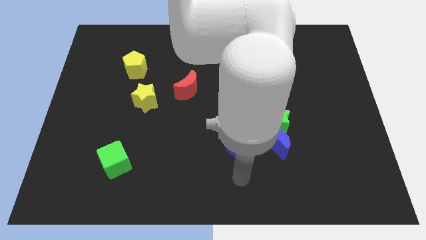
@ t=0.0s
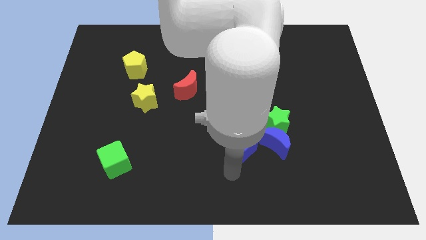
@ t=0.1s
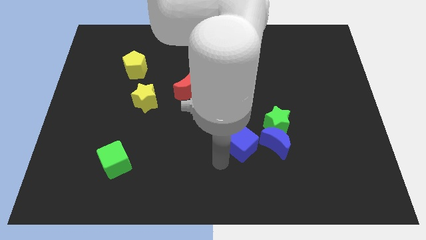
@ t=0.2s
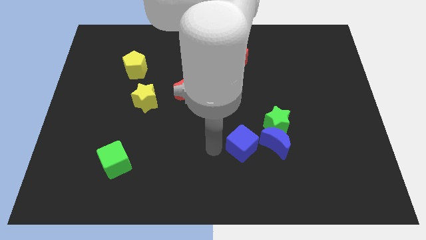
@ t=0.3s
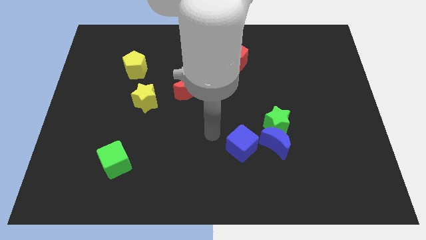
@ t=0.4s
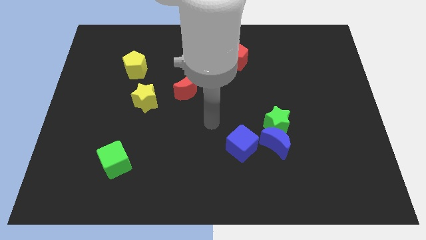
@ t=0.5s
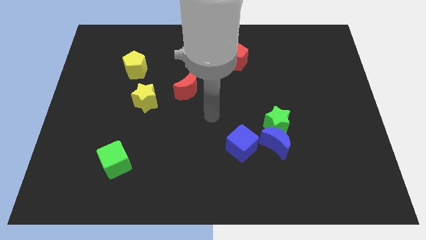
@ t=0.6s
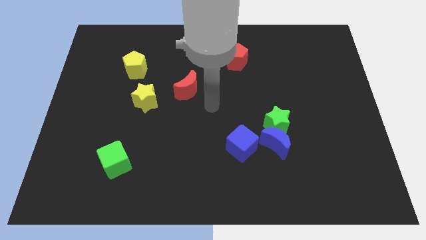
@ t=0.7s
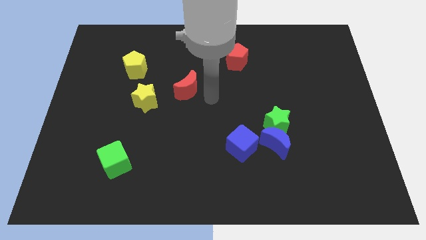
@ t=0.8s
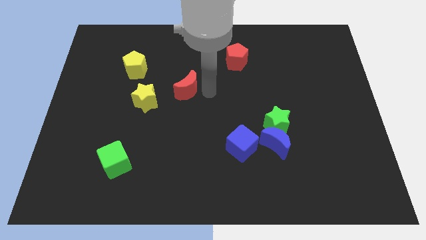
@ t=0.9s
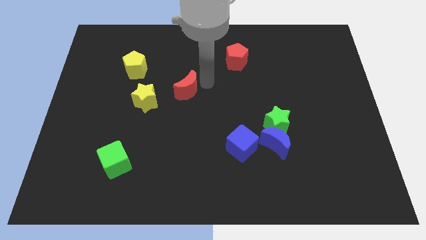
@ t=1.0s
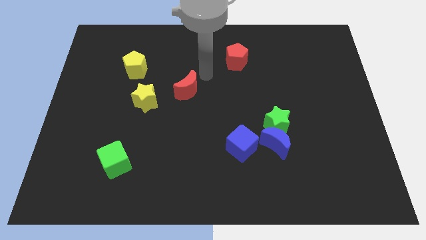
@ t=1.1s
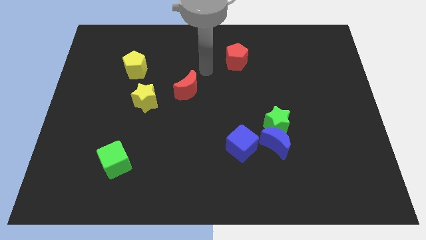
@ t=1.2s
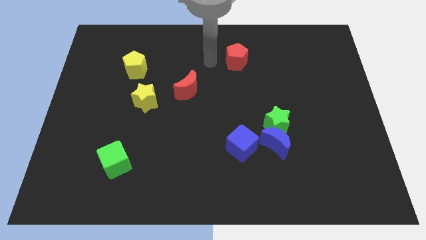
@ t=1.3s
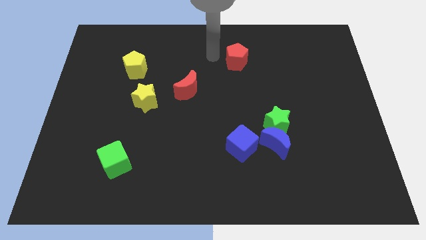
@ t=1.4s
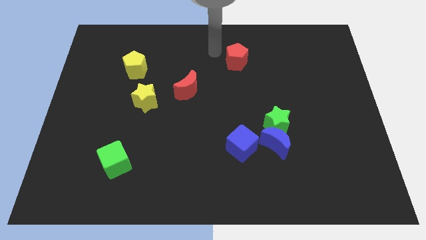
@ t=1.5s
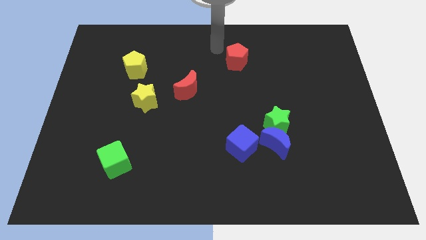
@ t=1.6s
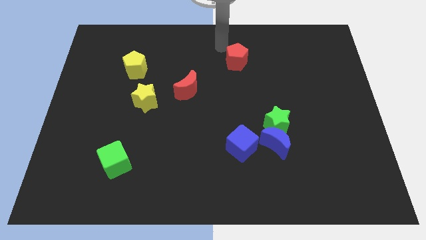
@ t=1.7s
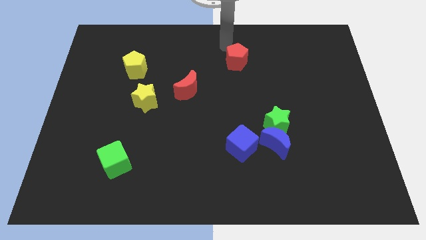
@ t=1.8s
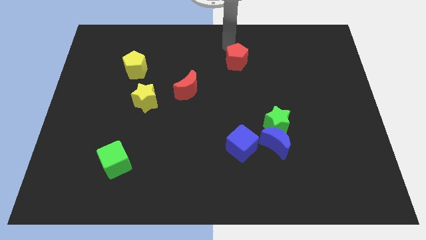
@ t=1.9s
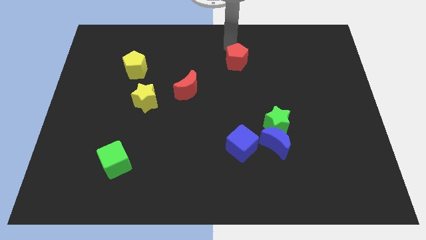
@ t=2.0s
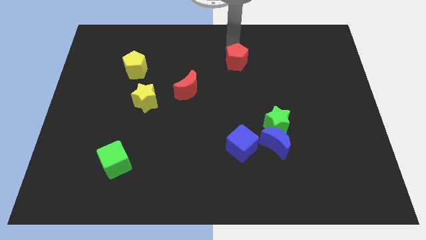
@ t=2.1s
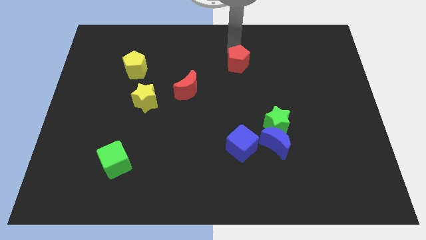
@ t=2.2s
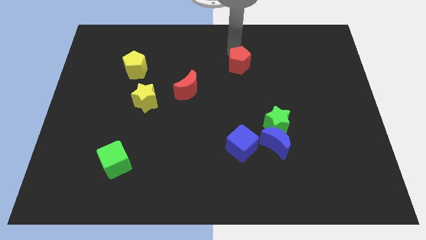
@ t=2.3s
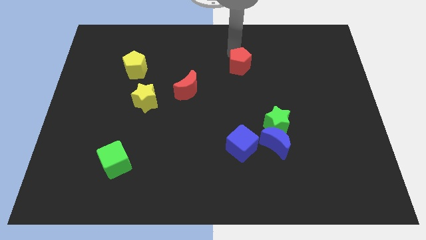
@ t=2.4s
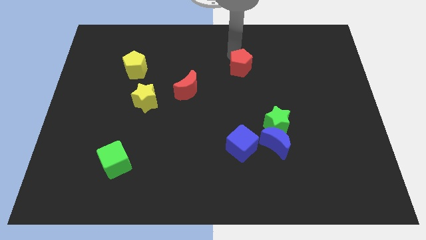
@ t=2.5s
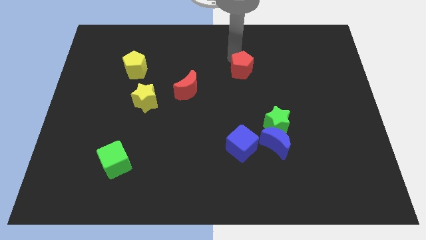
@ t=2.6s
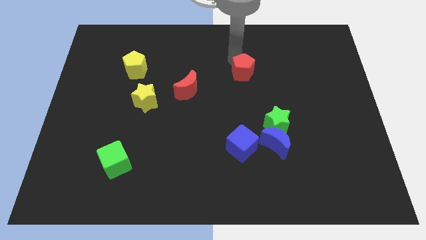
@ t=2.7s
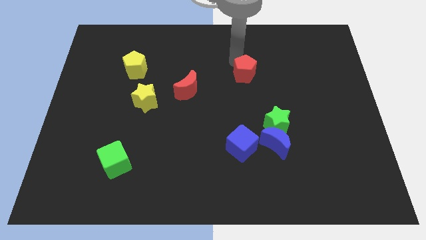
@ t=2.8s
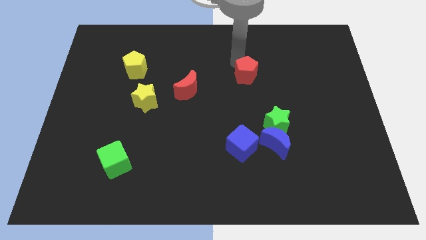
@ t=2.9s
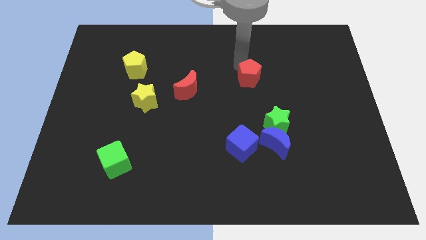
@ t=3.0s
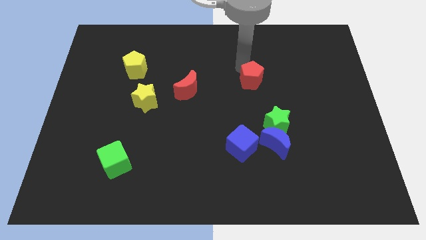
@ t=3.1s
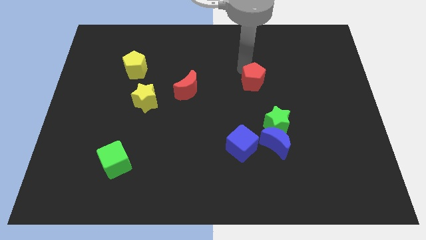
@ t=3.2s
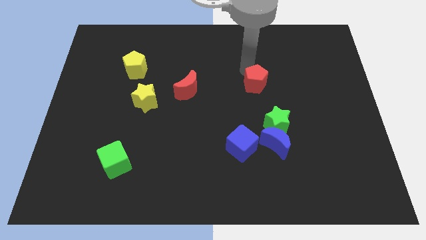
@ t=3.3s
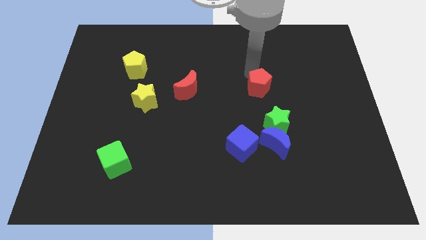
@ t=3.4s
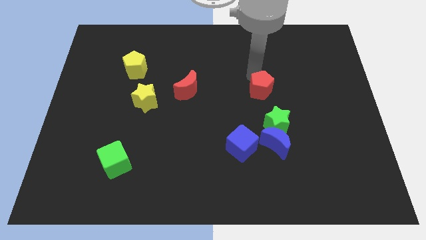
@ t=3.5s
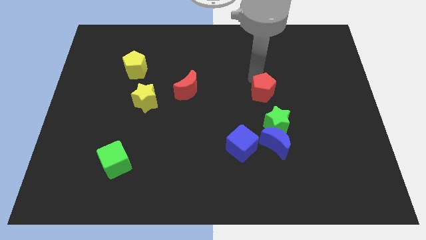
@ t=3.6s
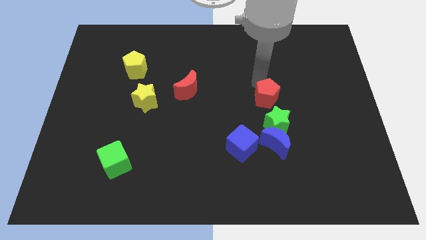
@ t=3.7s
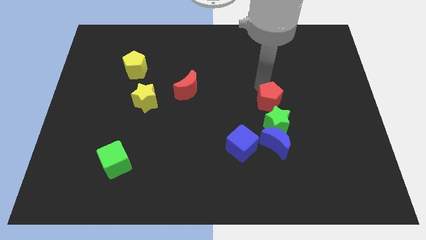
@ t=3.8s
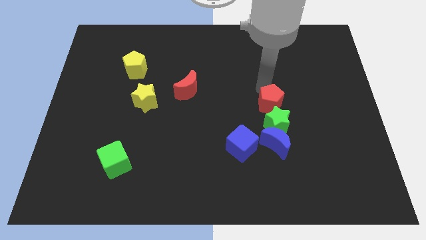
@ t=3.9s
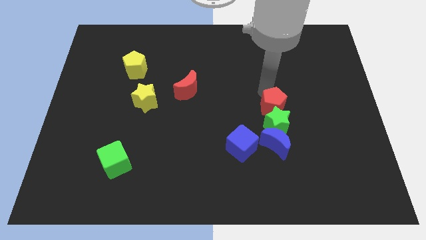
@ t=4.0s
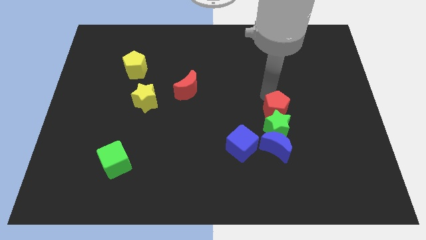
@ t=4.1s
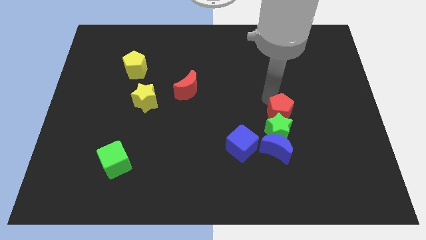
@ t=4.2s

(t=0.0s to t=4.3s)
move the red pentagon close to the green star

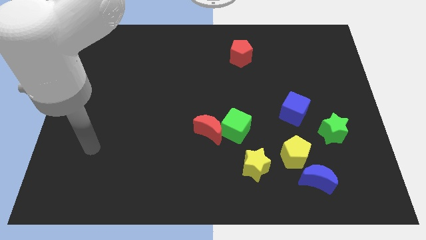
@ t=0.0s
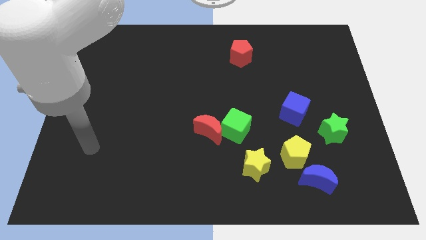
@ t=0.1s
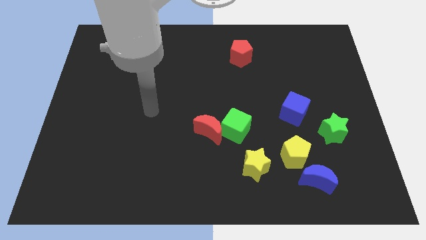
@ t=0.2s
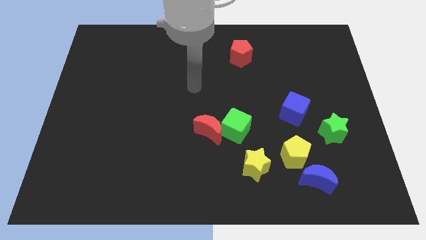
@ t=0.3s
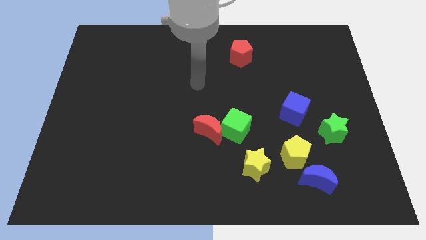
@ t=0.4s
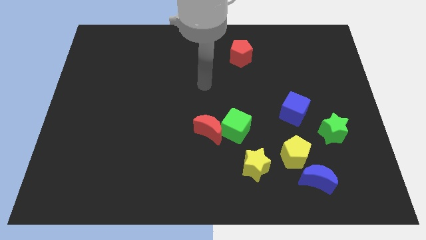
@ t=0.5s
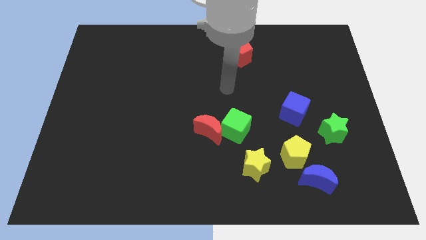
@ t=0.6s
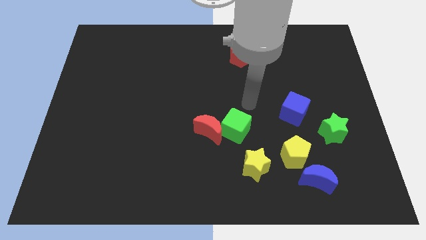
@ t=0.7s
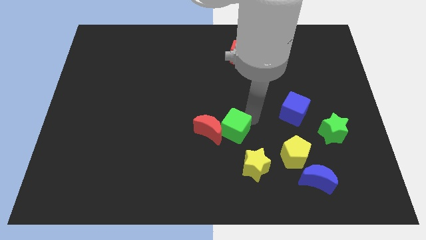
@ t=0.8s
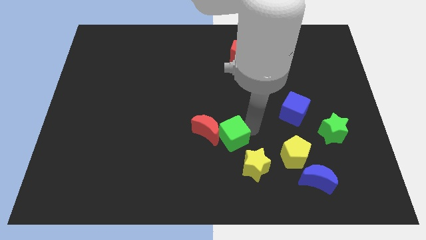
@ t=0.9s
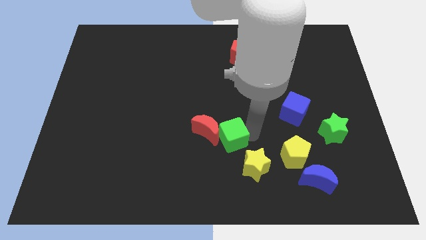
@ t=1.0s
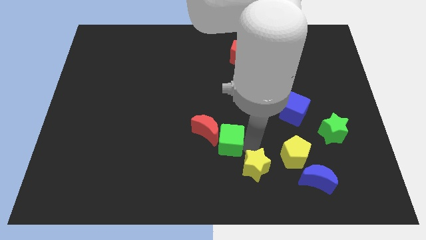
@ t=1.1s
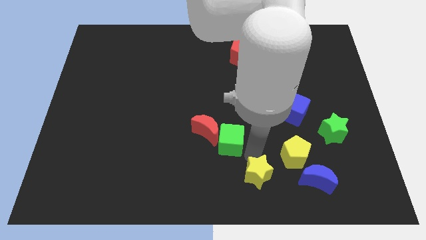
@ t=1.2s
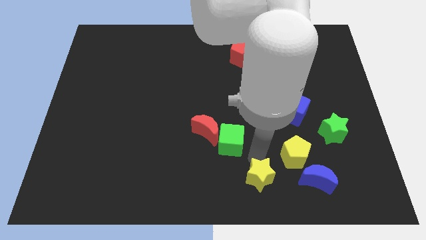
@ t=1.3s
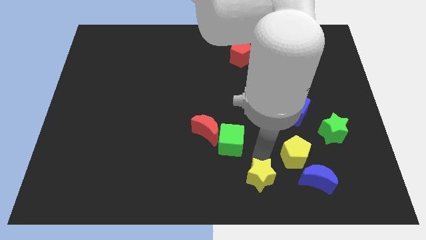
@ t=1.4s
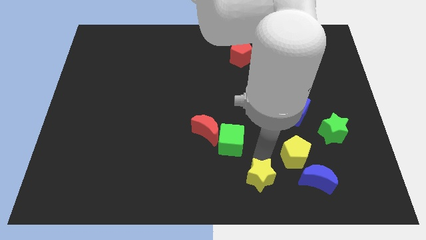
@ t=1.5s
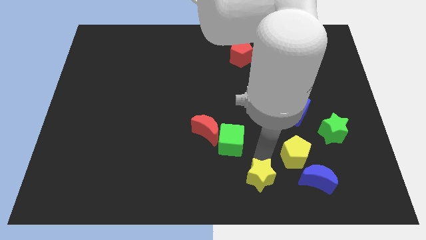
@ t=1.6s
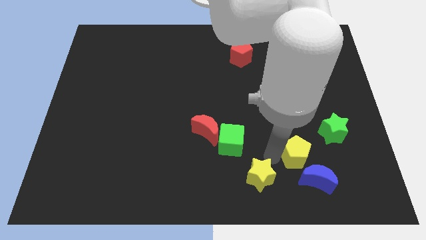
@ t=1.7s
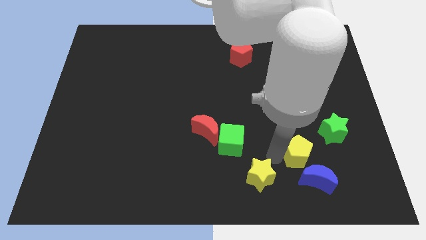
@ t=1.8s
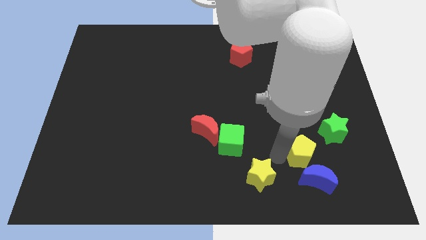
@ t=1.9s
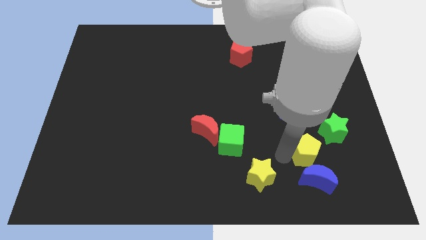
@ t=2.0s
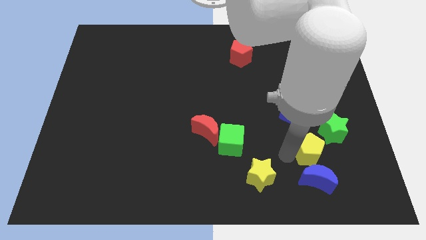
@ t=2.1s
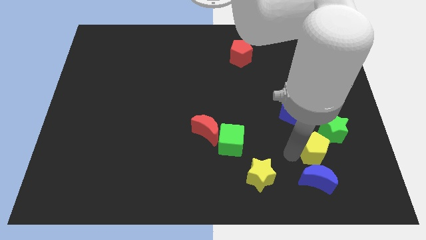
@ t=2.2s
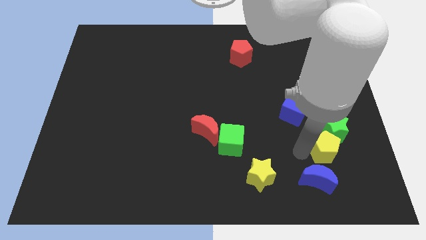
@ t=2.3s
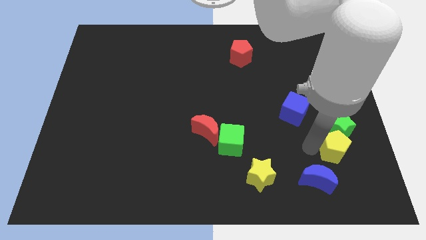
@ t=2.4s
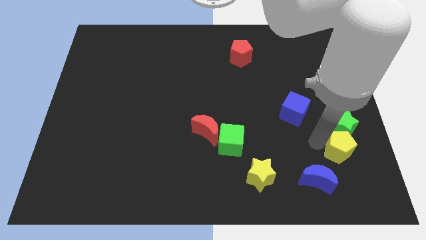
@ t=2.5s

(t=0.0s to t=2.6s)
put the yellow pentagon close to the green star

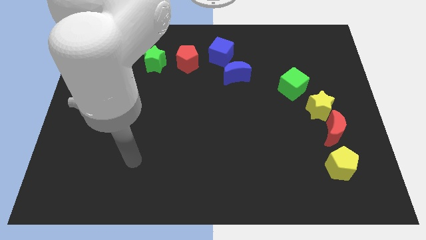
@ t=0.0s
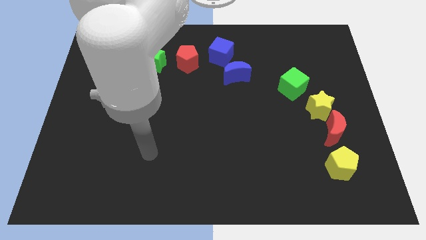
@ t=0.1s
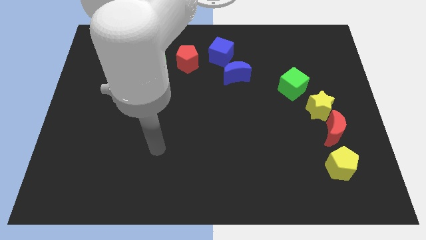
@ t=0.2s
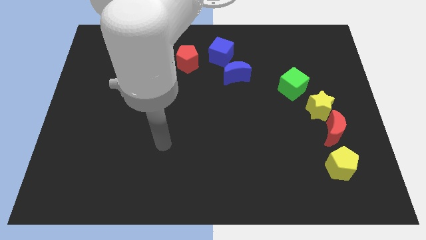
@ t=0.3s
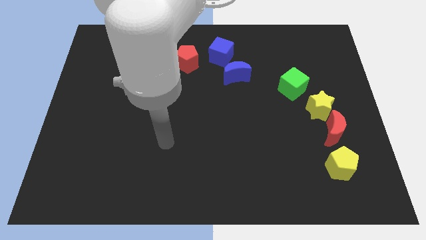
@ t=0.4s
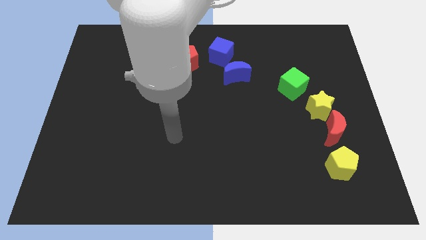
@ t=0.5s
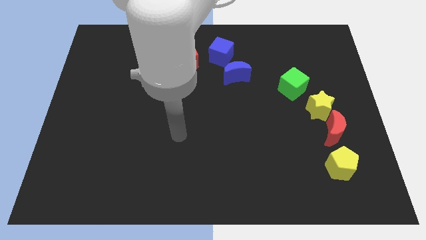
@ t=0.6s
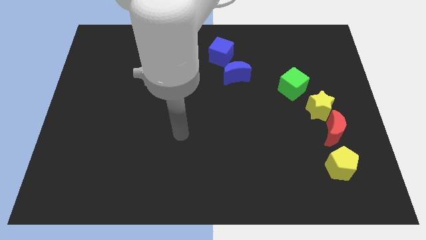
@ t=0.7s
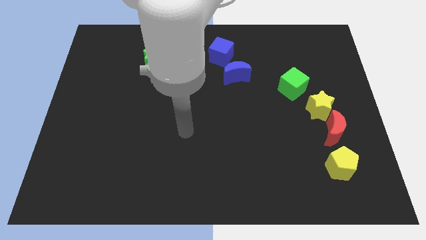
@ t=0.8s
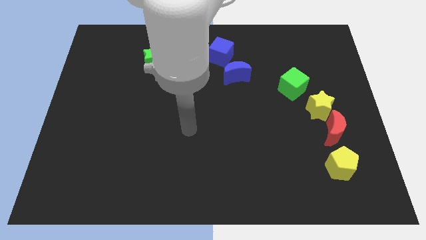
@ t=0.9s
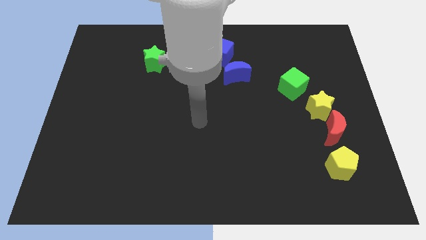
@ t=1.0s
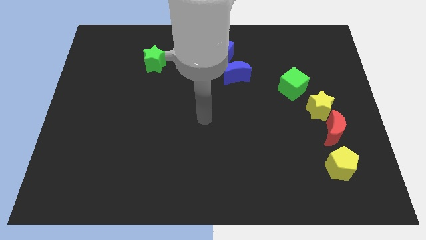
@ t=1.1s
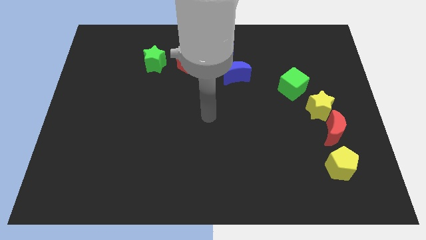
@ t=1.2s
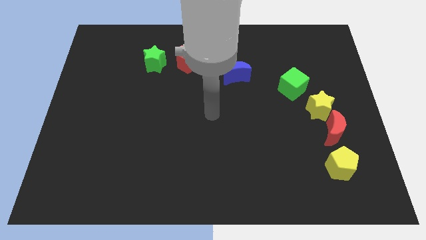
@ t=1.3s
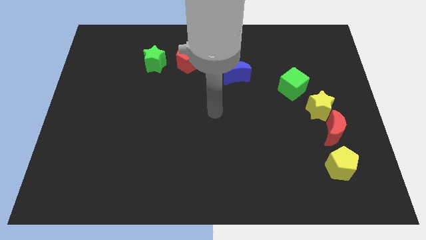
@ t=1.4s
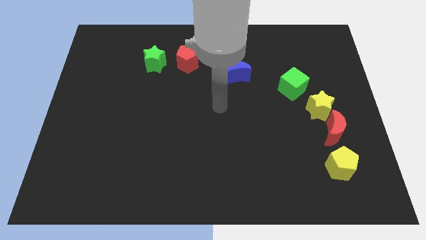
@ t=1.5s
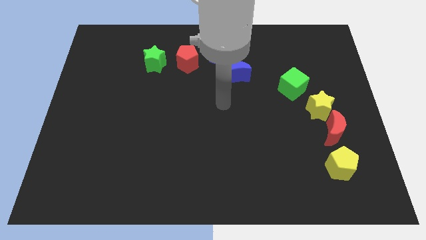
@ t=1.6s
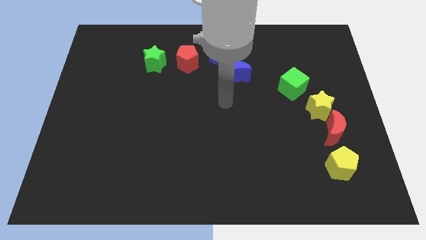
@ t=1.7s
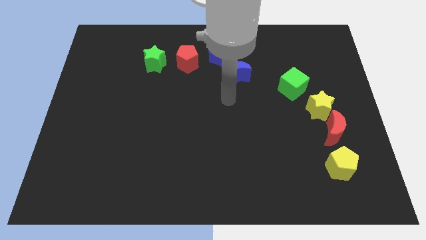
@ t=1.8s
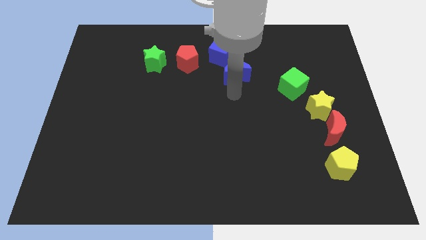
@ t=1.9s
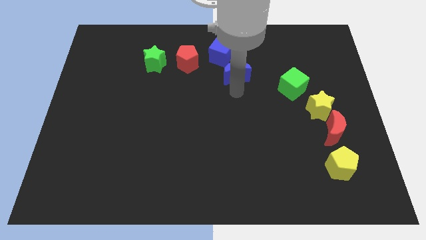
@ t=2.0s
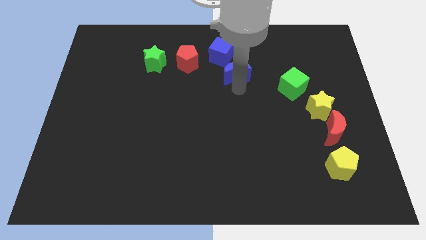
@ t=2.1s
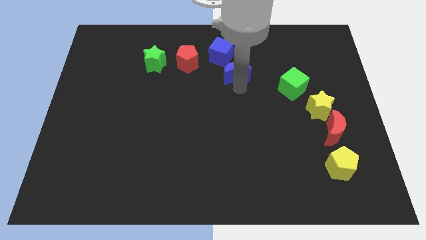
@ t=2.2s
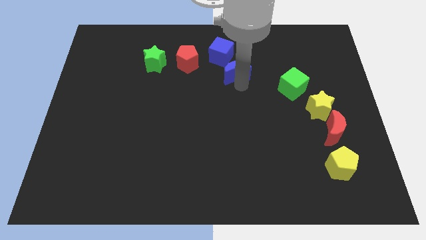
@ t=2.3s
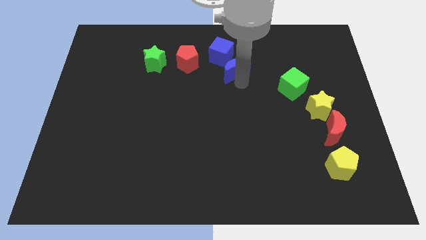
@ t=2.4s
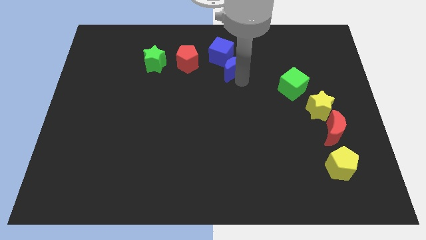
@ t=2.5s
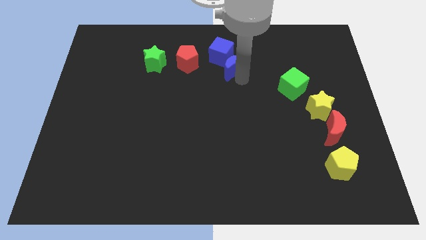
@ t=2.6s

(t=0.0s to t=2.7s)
put the blue moon close to the blue cube
